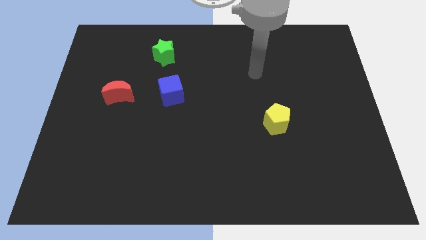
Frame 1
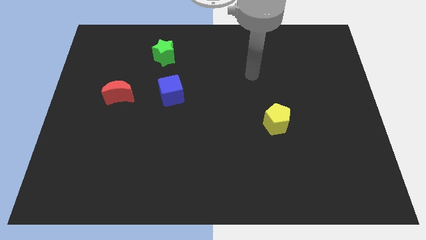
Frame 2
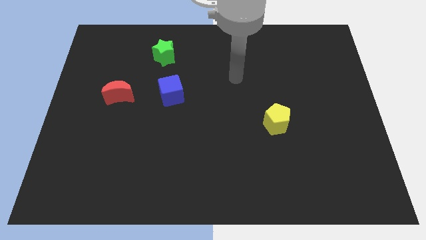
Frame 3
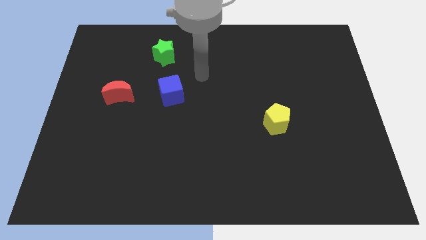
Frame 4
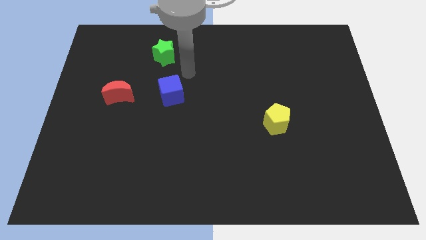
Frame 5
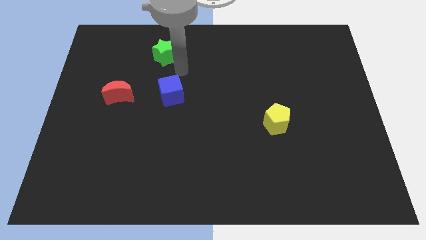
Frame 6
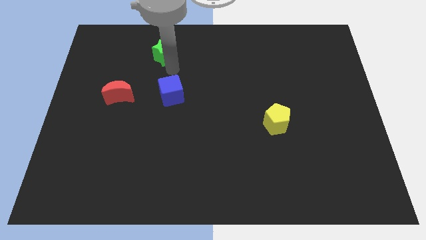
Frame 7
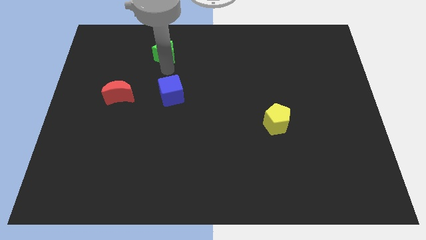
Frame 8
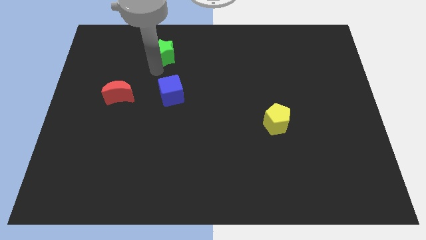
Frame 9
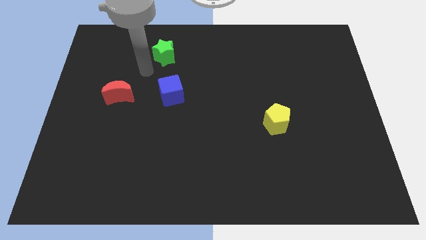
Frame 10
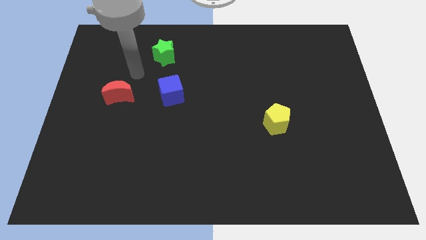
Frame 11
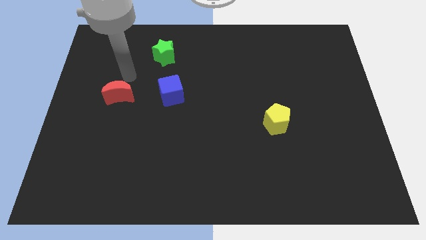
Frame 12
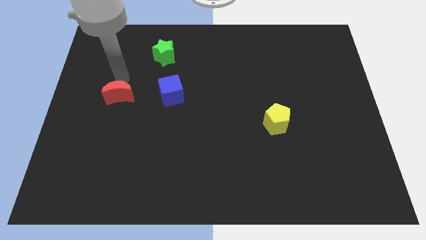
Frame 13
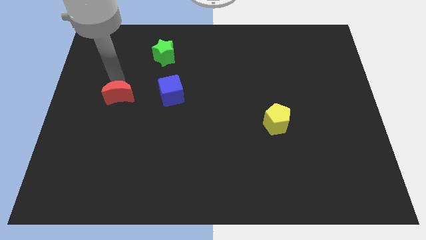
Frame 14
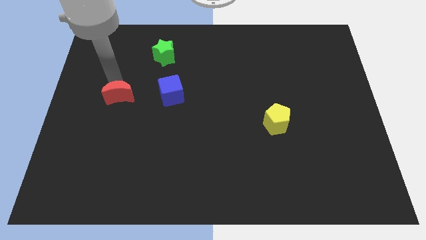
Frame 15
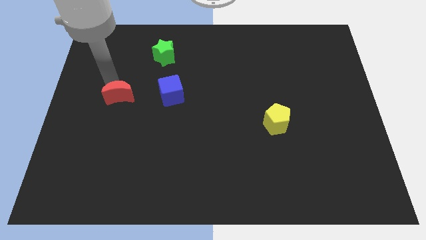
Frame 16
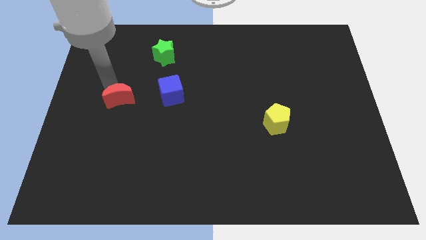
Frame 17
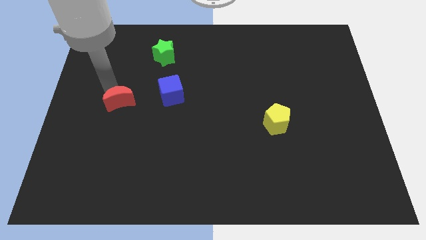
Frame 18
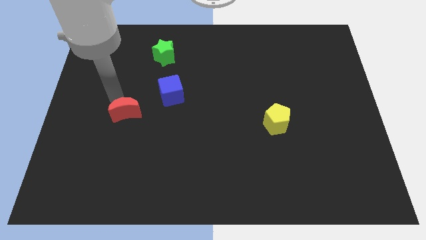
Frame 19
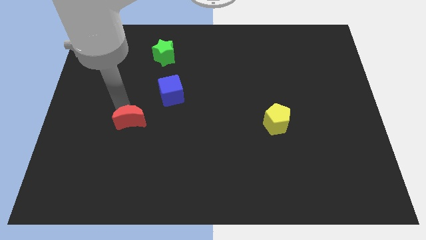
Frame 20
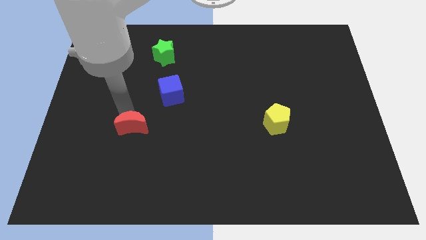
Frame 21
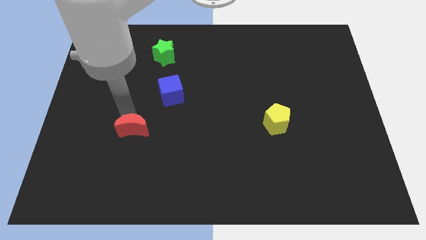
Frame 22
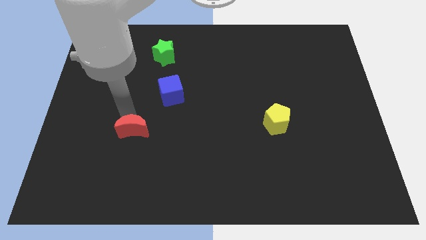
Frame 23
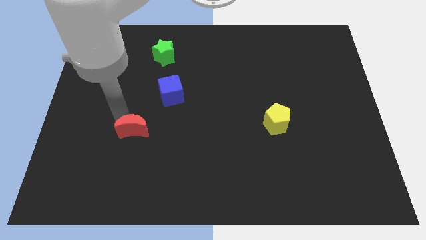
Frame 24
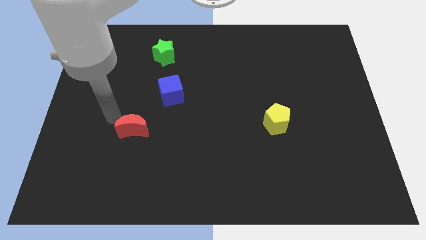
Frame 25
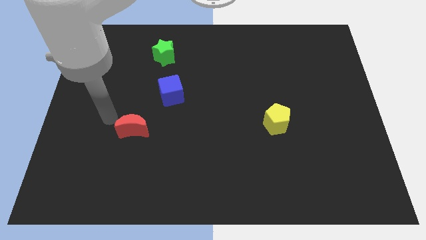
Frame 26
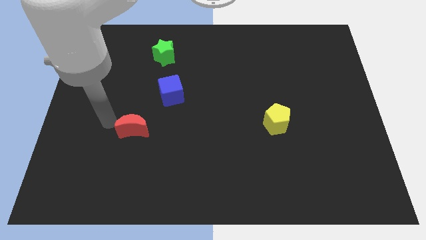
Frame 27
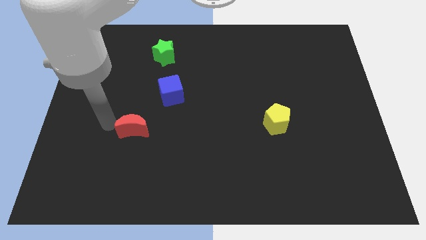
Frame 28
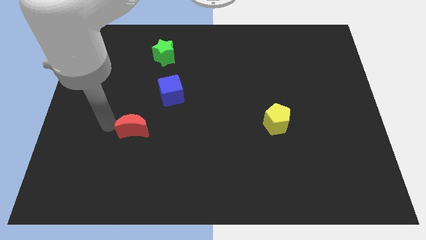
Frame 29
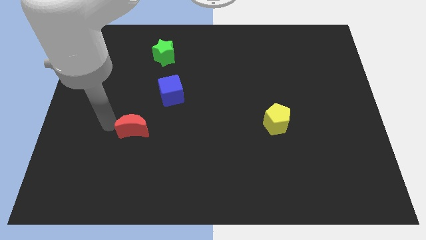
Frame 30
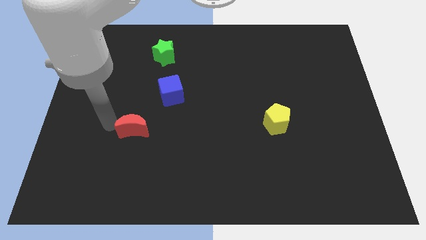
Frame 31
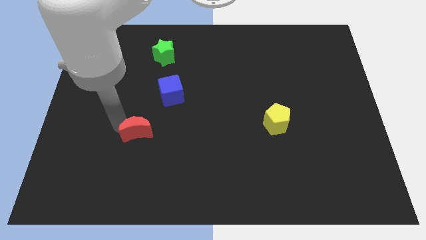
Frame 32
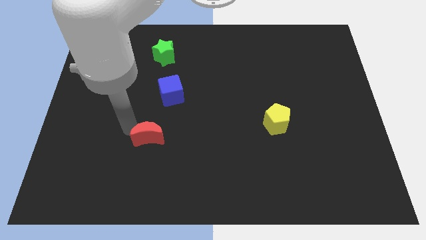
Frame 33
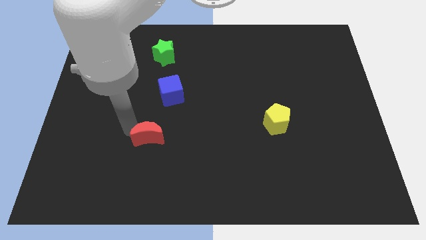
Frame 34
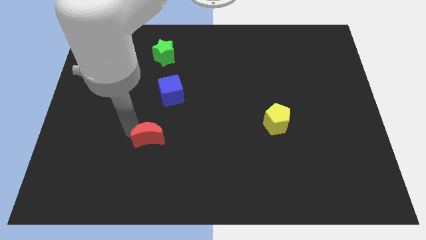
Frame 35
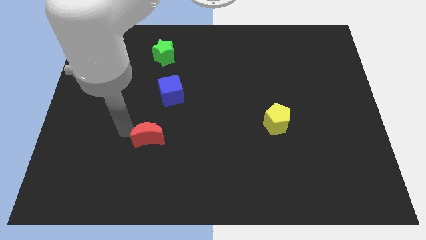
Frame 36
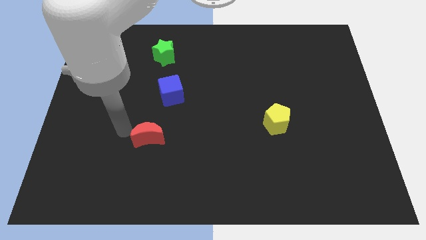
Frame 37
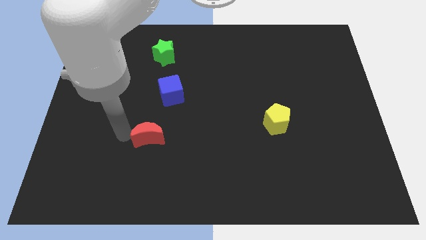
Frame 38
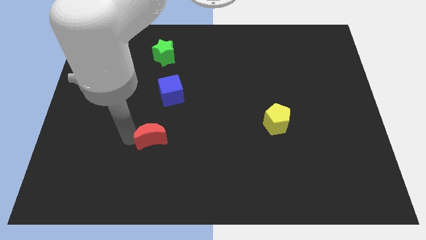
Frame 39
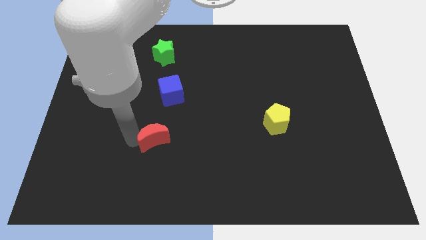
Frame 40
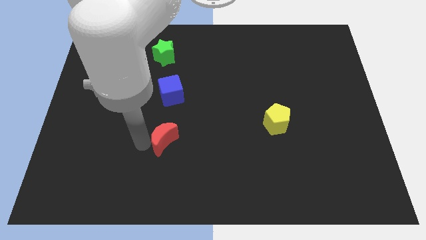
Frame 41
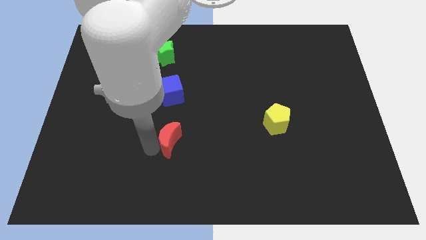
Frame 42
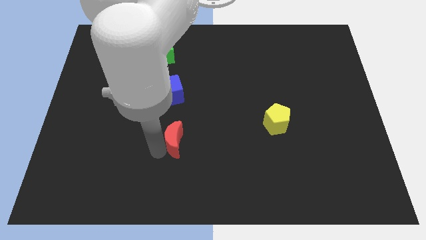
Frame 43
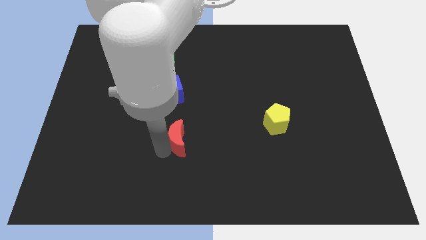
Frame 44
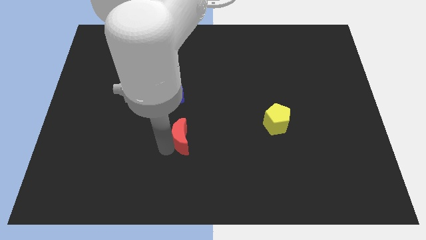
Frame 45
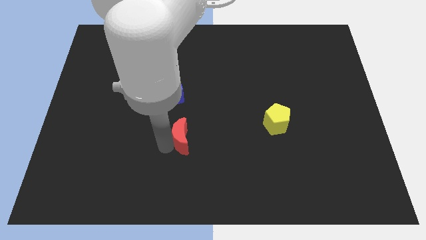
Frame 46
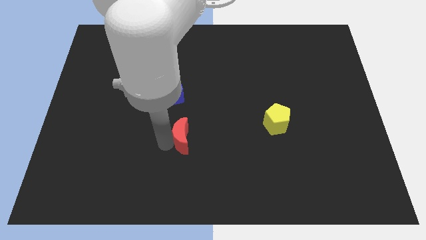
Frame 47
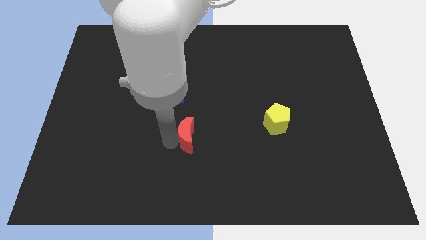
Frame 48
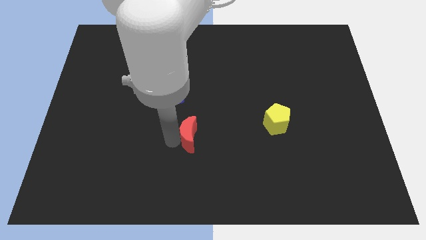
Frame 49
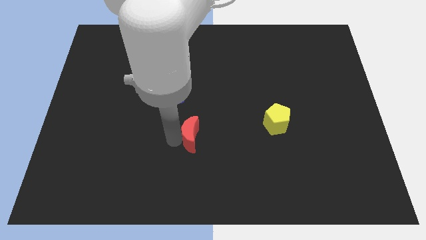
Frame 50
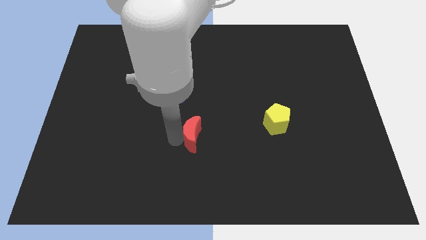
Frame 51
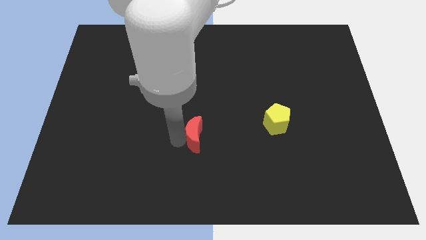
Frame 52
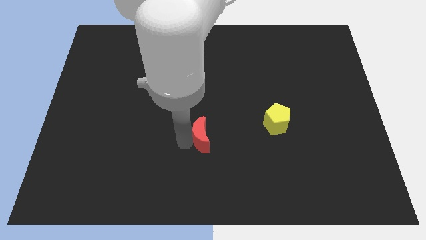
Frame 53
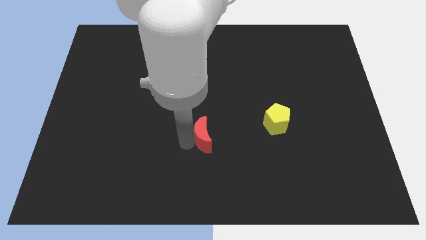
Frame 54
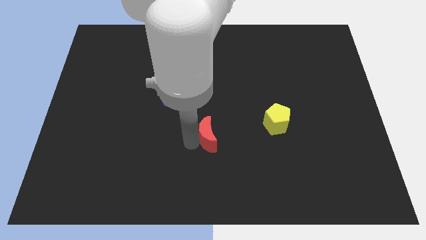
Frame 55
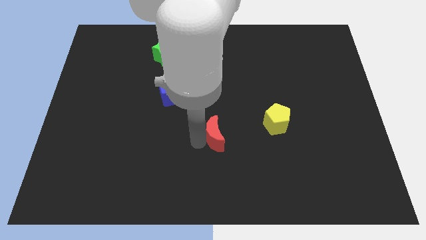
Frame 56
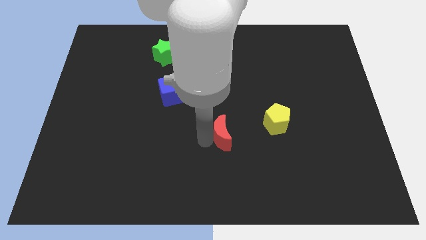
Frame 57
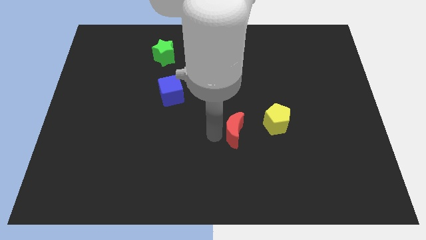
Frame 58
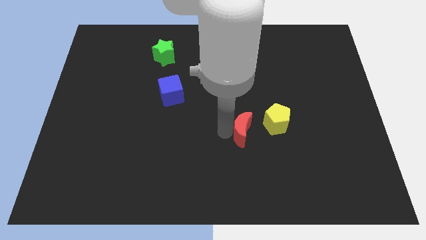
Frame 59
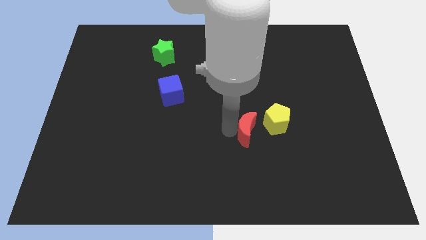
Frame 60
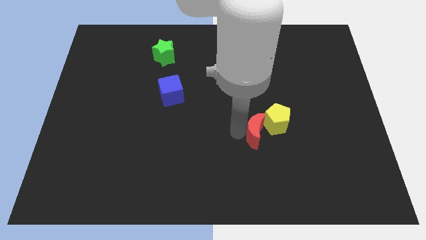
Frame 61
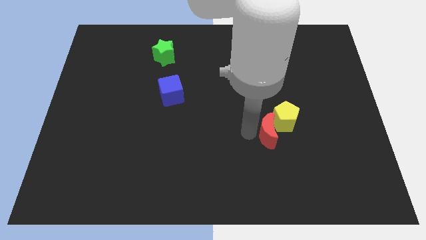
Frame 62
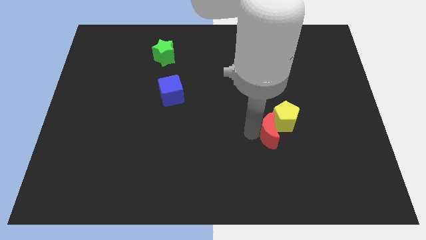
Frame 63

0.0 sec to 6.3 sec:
move the red block towards the yellow pentagon

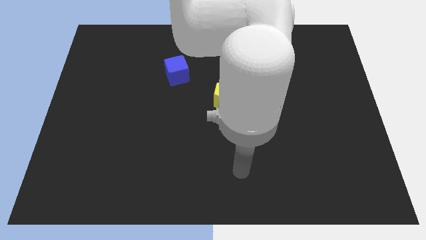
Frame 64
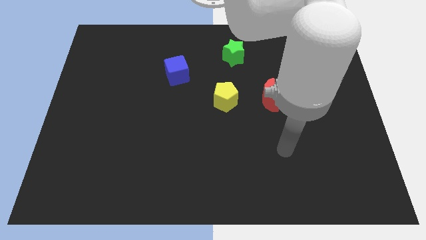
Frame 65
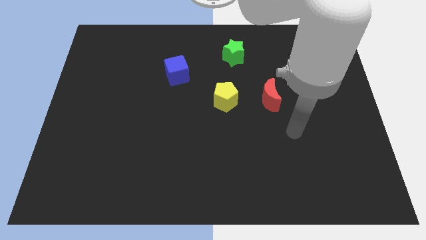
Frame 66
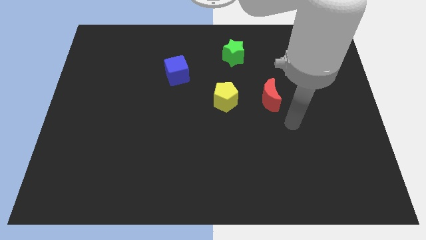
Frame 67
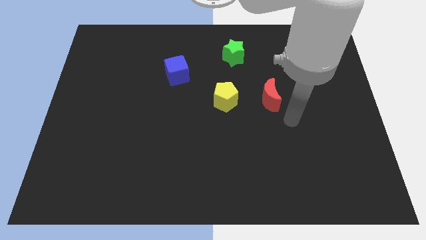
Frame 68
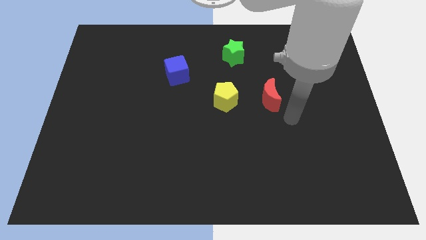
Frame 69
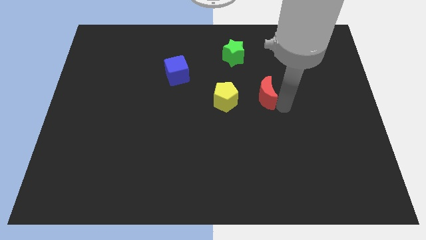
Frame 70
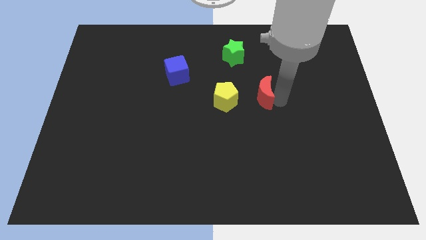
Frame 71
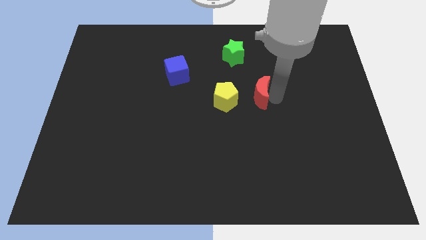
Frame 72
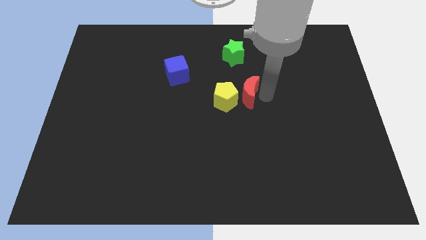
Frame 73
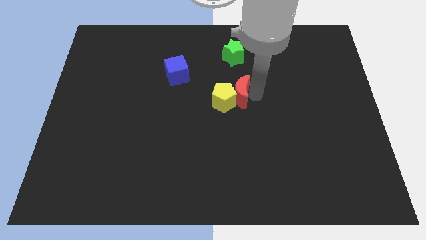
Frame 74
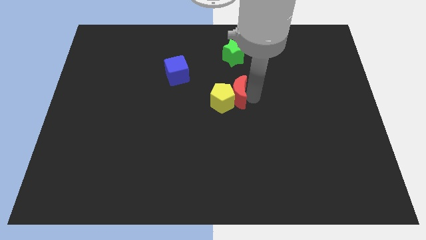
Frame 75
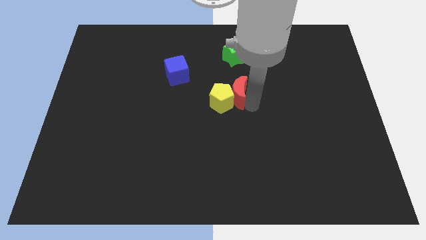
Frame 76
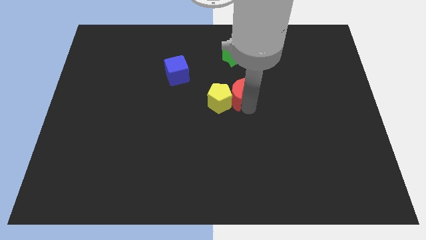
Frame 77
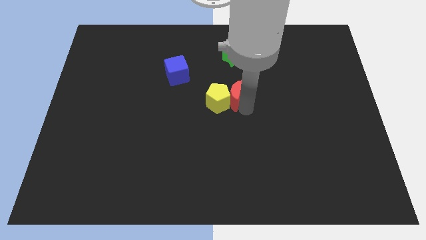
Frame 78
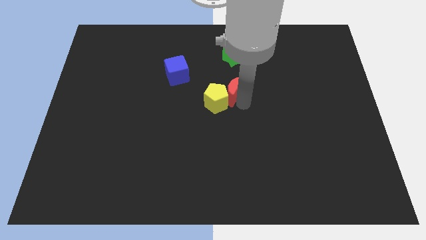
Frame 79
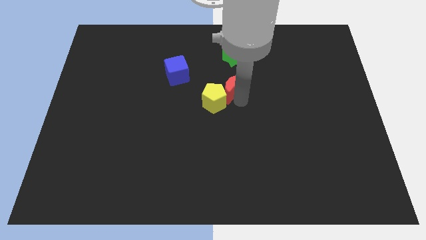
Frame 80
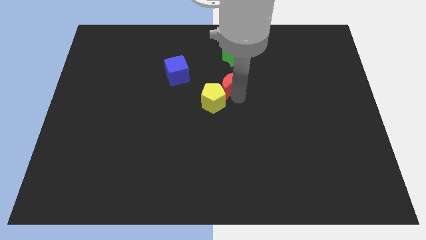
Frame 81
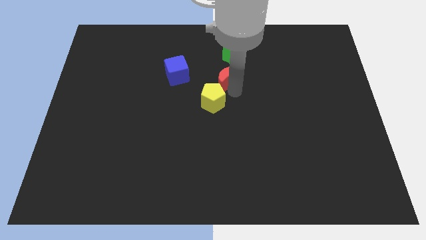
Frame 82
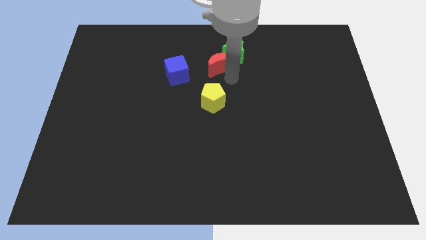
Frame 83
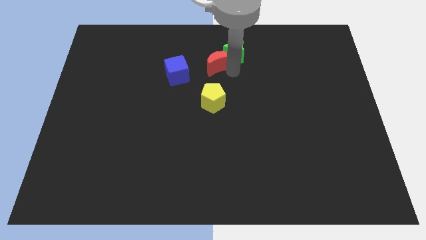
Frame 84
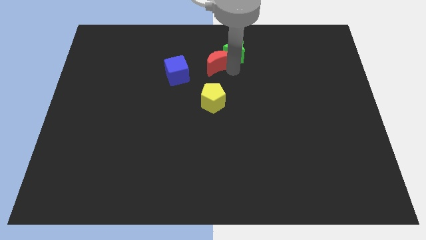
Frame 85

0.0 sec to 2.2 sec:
push the moon towards the green block

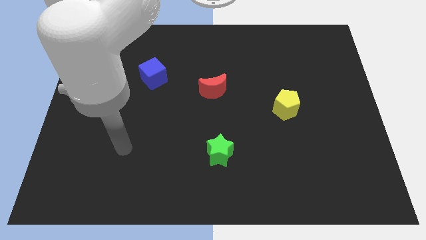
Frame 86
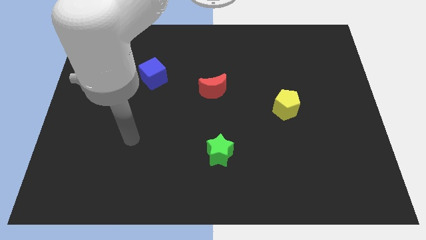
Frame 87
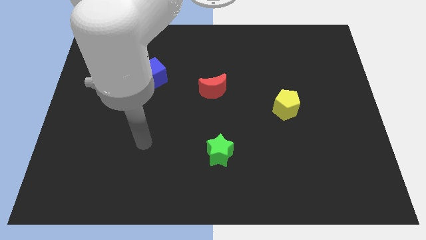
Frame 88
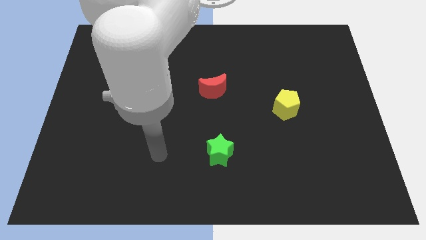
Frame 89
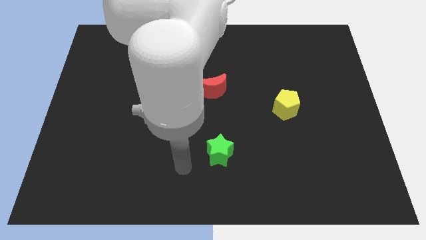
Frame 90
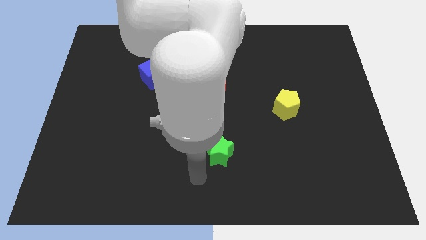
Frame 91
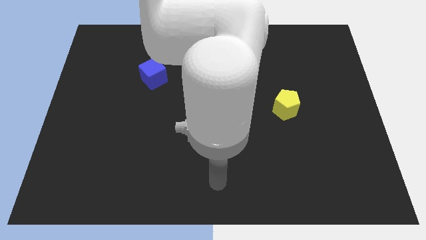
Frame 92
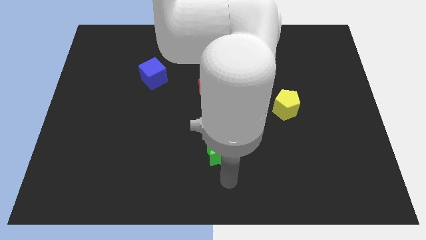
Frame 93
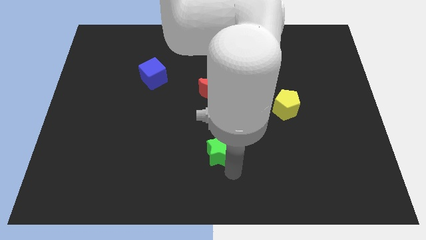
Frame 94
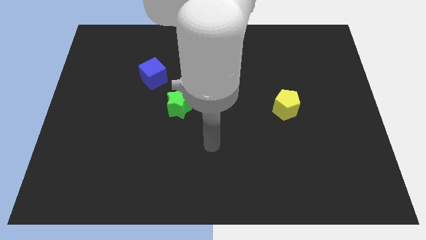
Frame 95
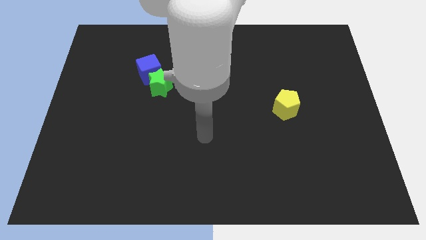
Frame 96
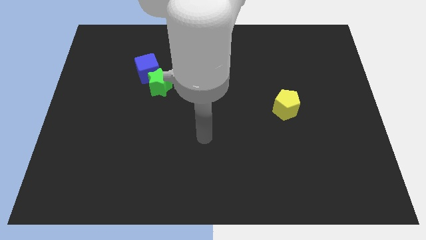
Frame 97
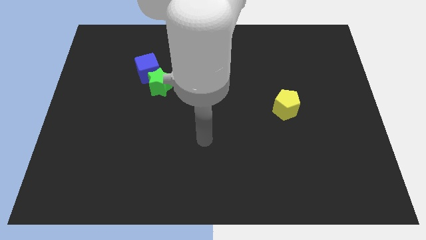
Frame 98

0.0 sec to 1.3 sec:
move the green star to the cube
